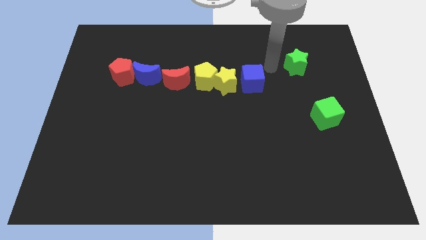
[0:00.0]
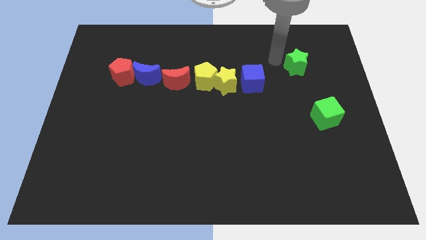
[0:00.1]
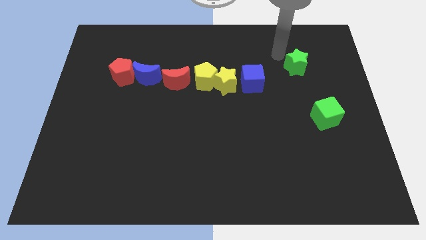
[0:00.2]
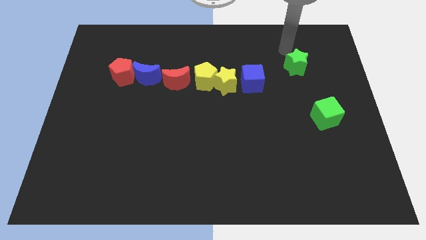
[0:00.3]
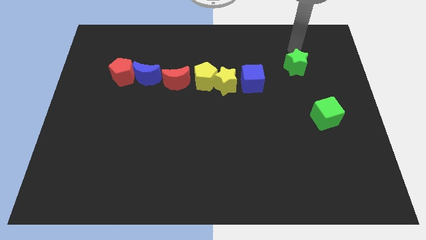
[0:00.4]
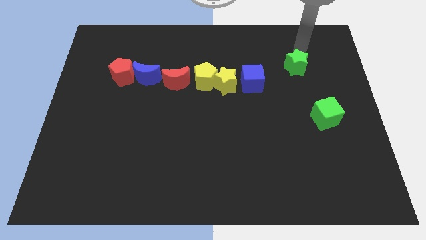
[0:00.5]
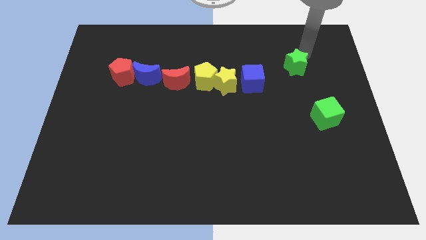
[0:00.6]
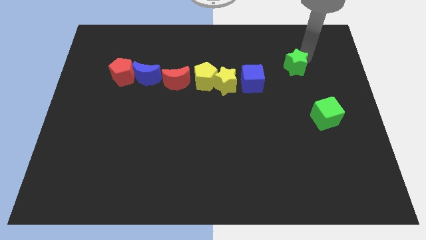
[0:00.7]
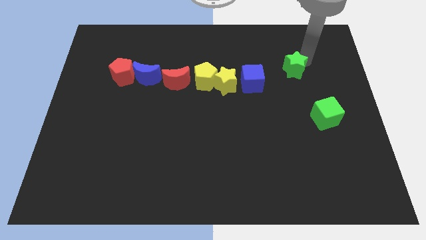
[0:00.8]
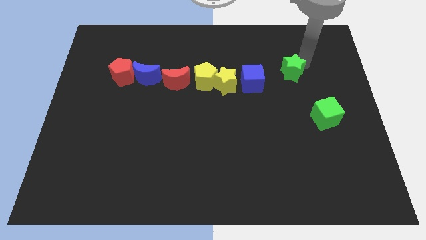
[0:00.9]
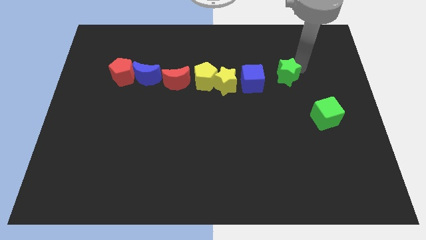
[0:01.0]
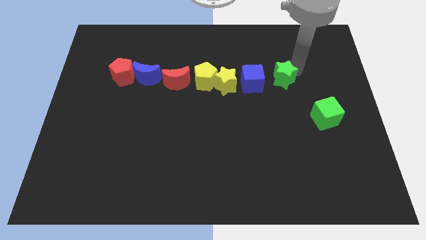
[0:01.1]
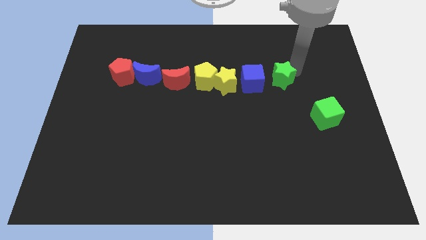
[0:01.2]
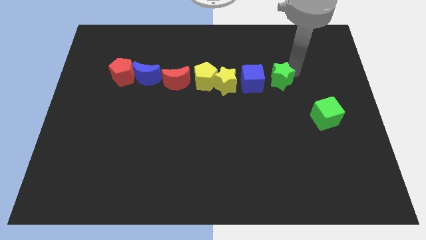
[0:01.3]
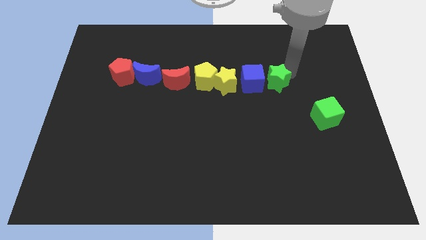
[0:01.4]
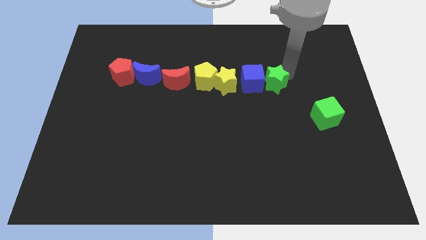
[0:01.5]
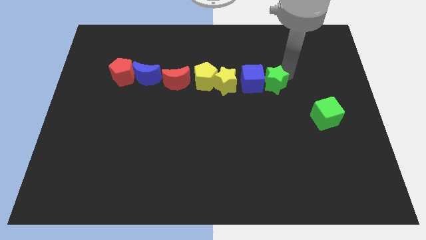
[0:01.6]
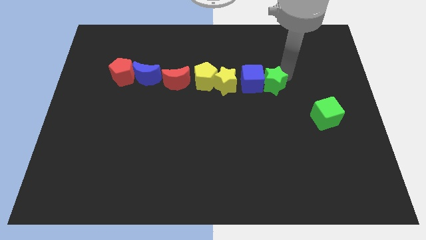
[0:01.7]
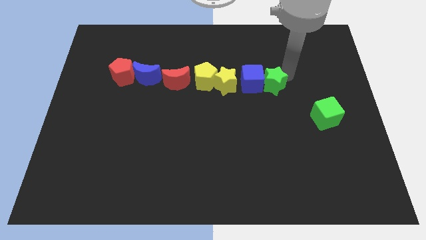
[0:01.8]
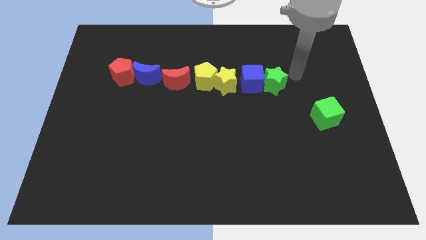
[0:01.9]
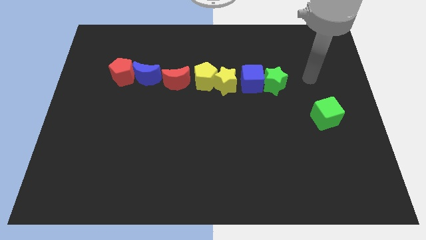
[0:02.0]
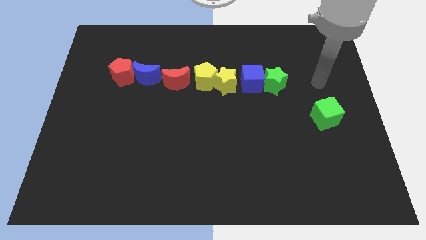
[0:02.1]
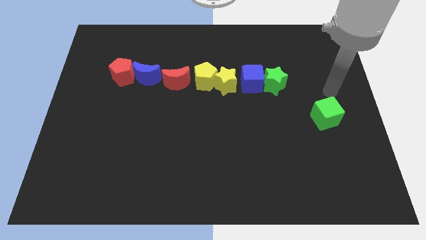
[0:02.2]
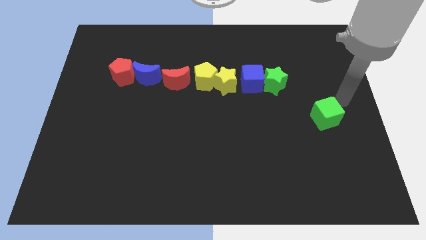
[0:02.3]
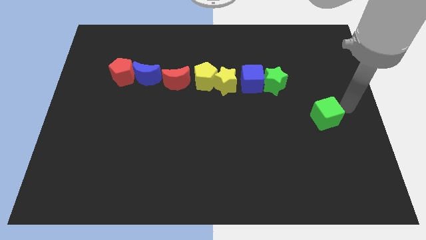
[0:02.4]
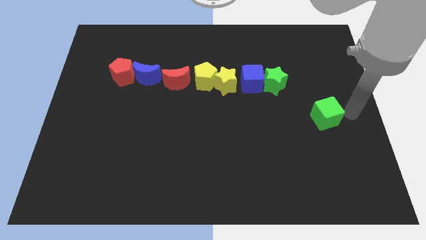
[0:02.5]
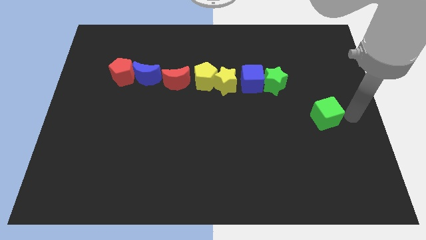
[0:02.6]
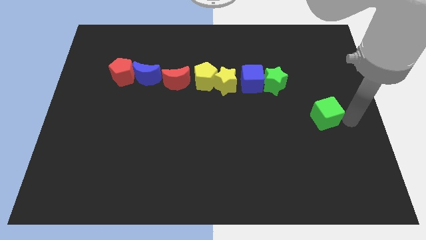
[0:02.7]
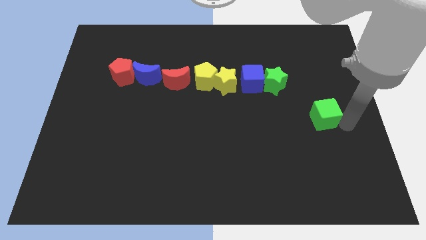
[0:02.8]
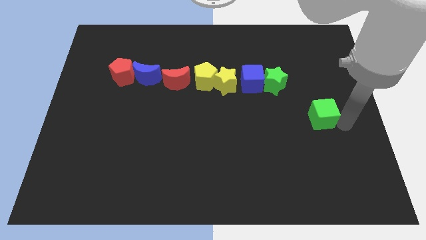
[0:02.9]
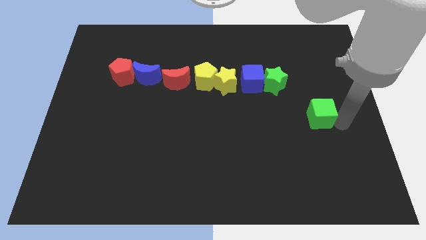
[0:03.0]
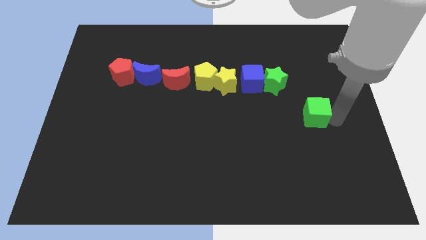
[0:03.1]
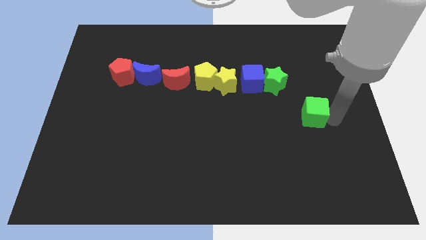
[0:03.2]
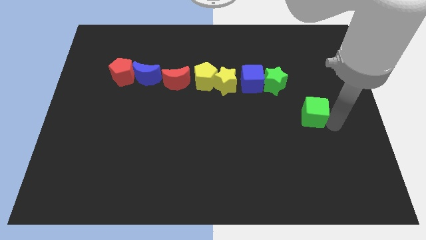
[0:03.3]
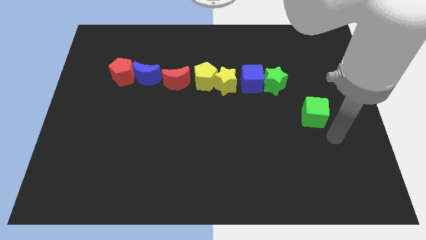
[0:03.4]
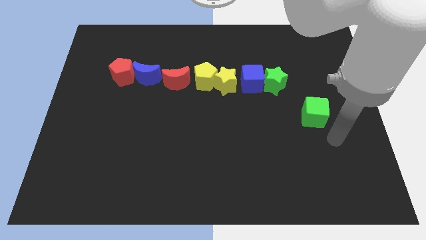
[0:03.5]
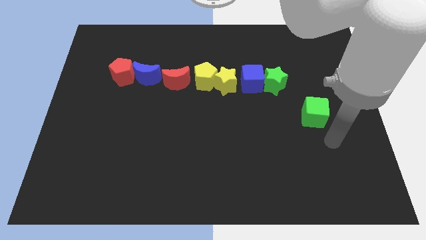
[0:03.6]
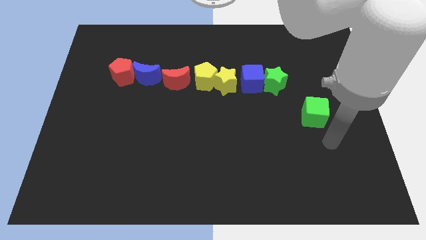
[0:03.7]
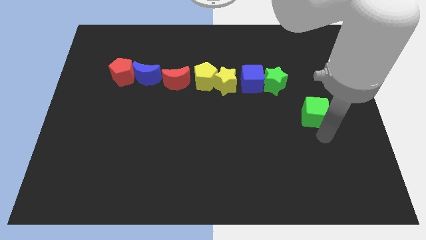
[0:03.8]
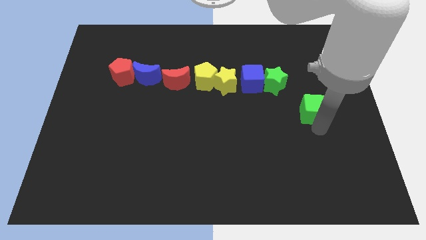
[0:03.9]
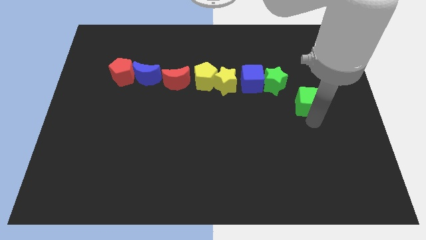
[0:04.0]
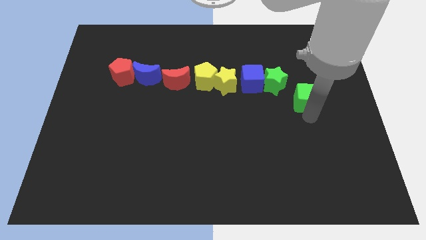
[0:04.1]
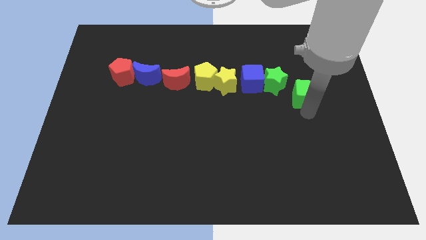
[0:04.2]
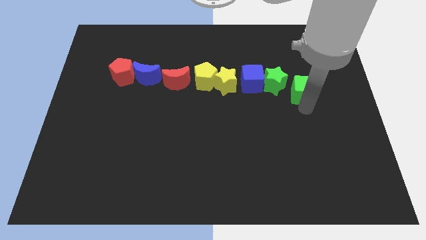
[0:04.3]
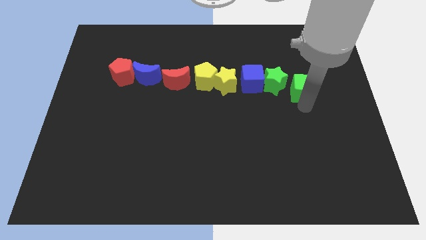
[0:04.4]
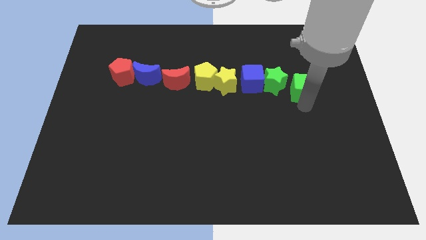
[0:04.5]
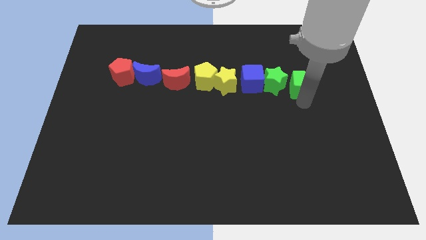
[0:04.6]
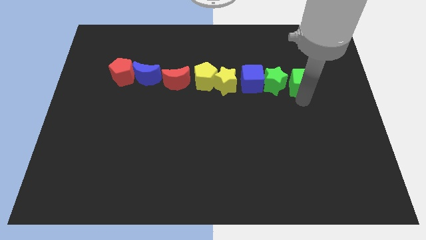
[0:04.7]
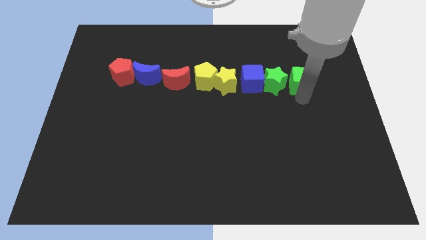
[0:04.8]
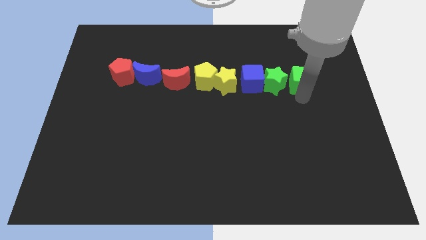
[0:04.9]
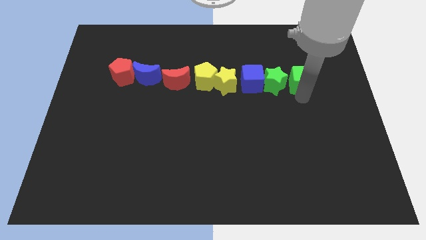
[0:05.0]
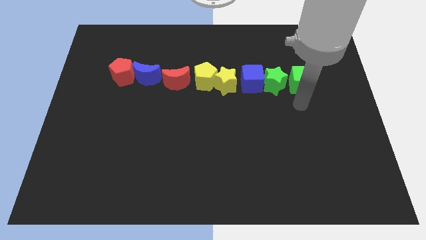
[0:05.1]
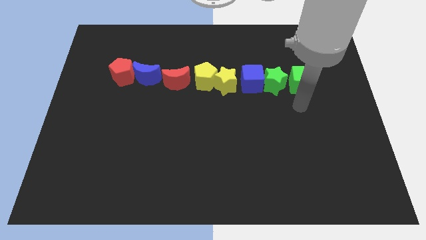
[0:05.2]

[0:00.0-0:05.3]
place both the green blocks to the right side of the blue cube

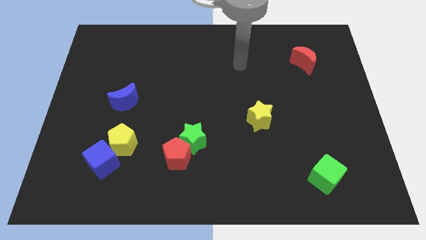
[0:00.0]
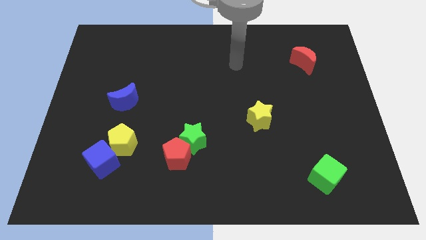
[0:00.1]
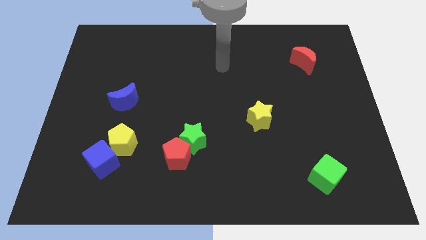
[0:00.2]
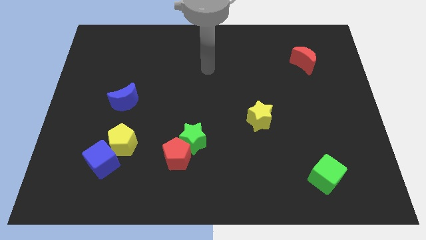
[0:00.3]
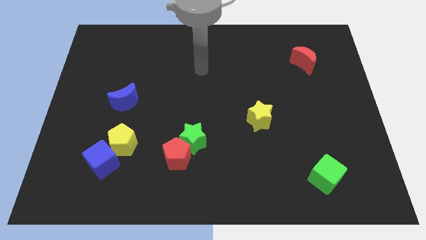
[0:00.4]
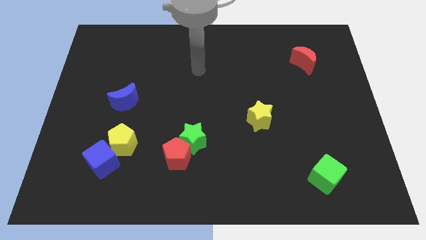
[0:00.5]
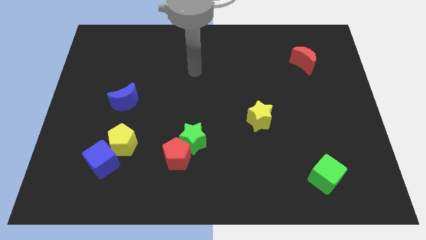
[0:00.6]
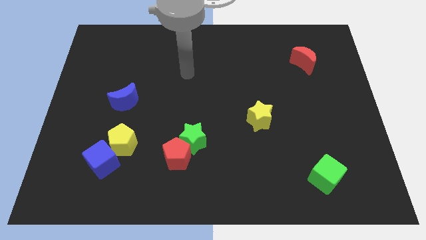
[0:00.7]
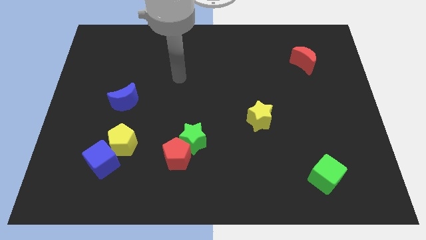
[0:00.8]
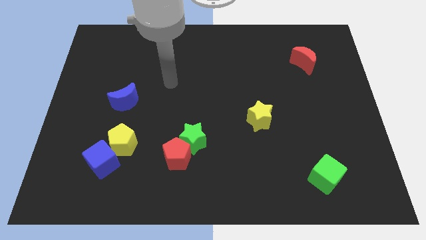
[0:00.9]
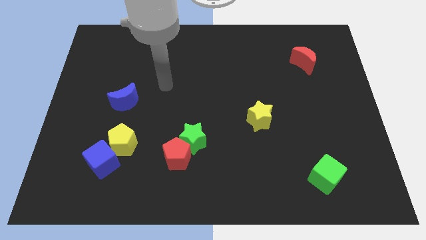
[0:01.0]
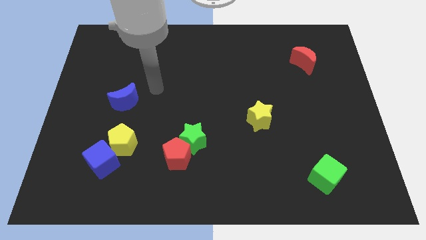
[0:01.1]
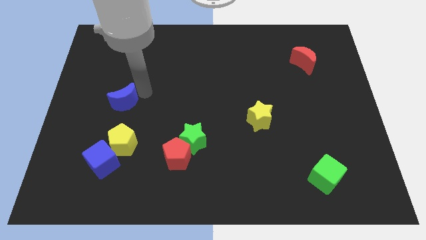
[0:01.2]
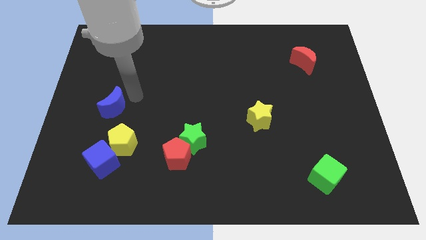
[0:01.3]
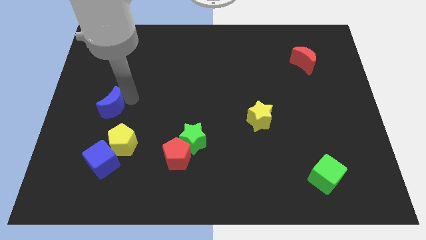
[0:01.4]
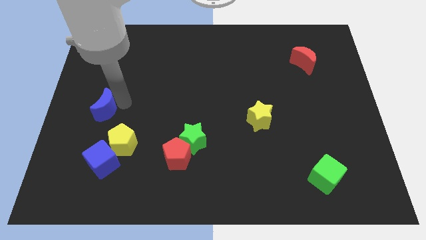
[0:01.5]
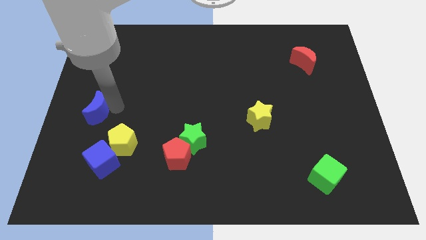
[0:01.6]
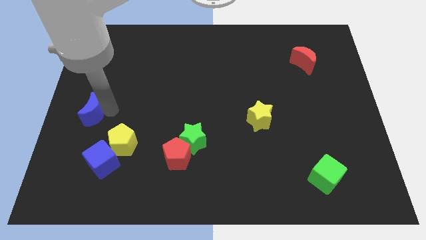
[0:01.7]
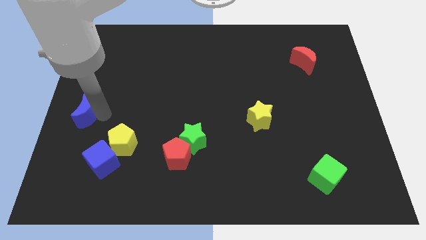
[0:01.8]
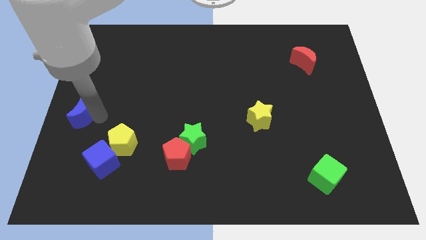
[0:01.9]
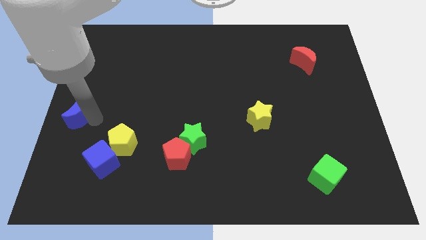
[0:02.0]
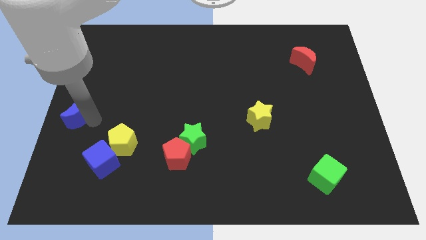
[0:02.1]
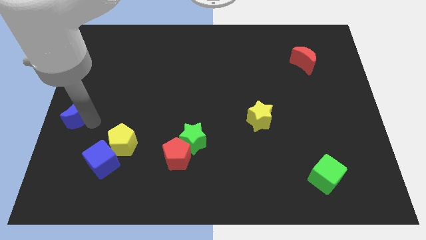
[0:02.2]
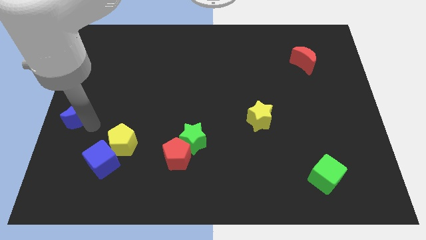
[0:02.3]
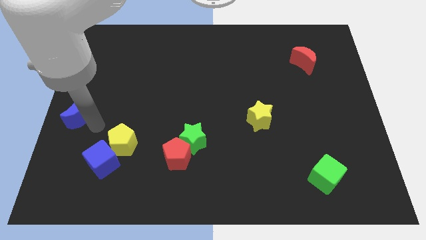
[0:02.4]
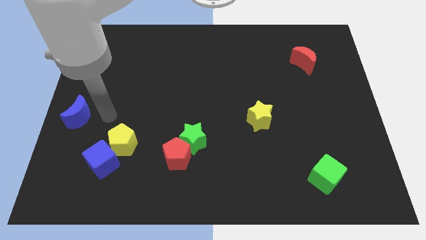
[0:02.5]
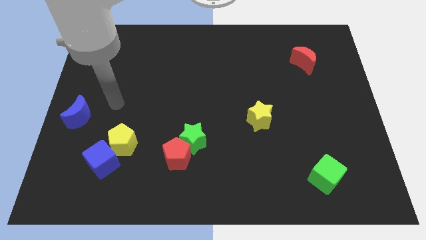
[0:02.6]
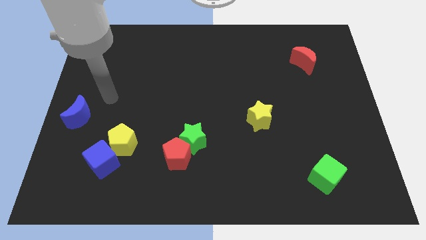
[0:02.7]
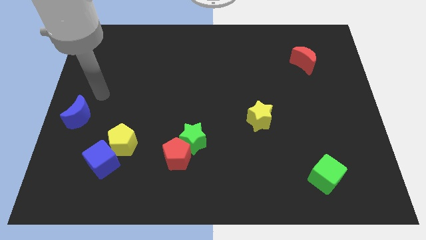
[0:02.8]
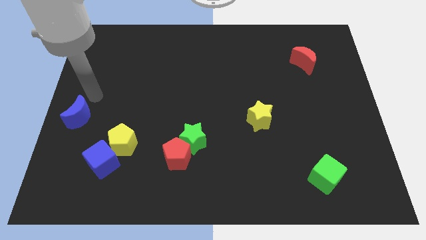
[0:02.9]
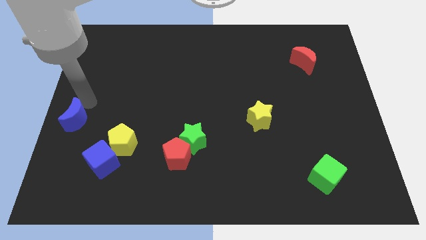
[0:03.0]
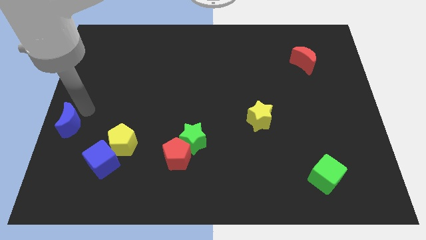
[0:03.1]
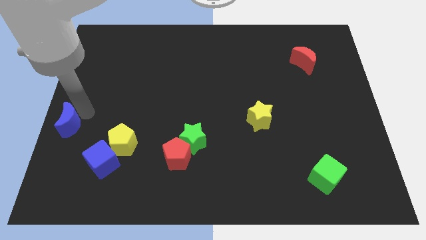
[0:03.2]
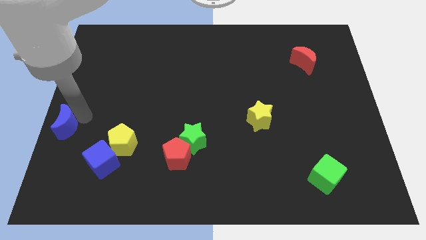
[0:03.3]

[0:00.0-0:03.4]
push the blue moon to the left side of the board

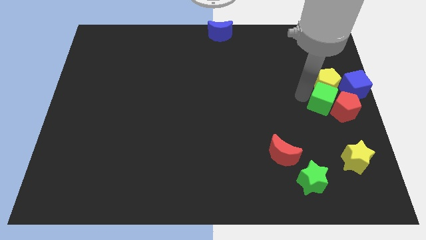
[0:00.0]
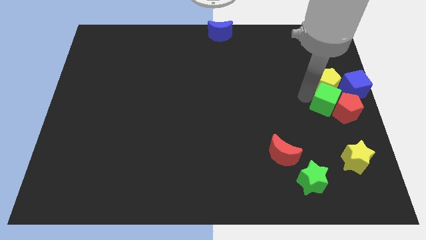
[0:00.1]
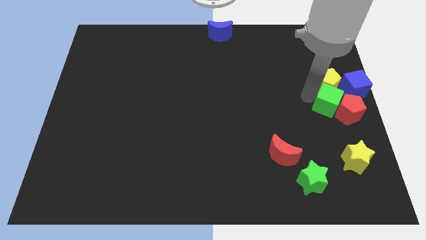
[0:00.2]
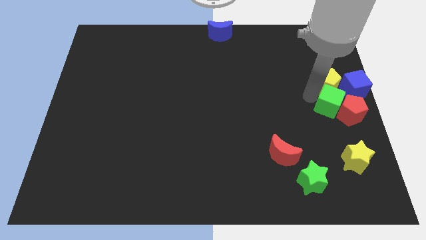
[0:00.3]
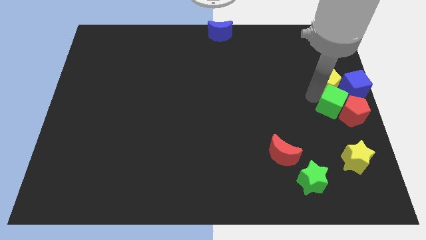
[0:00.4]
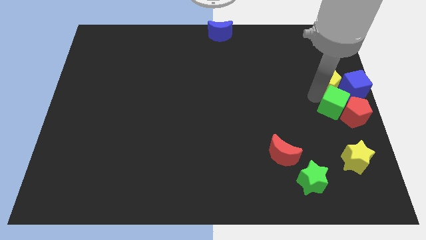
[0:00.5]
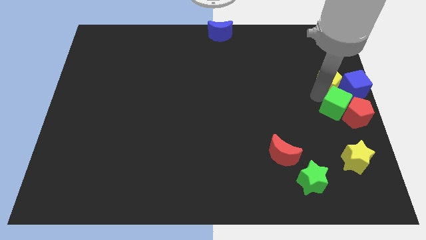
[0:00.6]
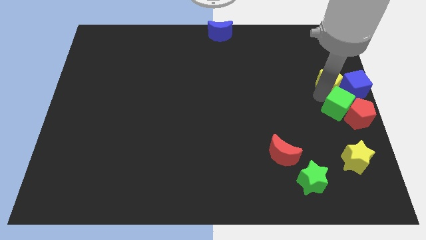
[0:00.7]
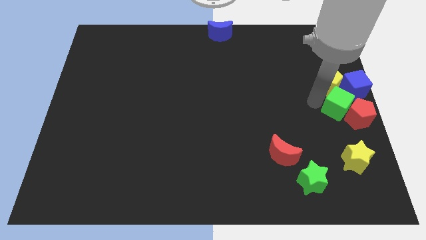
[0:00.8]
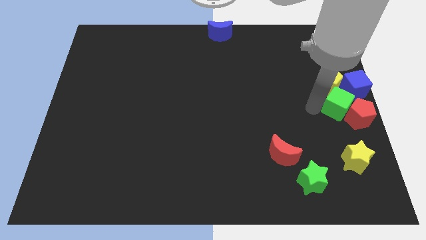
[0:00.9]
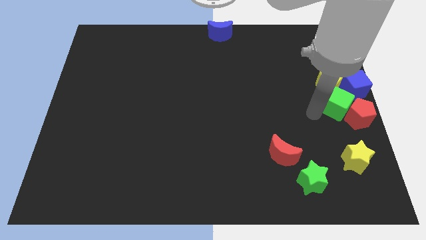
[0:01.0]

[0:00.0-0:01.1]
push red pentagon with the help of green cube
